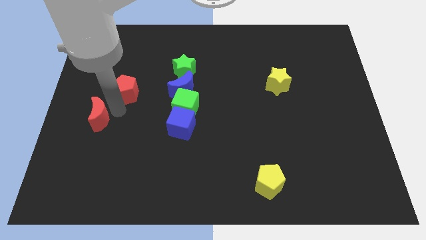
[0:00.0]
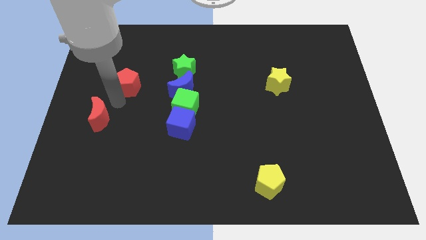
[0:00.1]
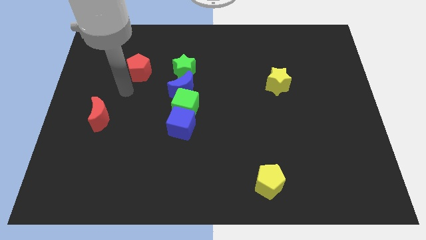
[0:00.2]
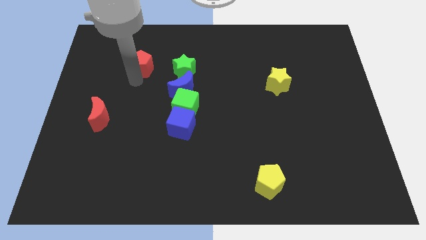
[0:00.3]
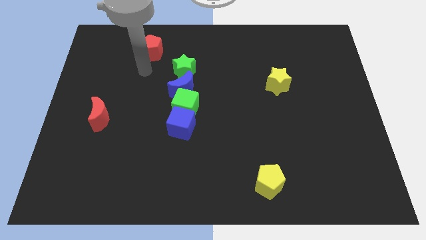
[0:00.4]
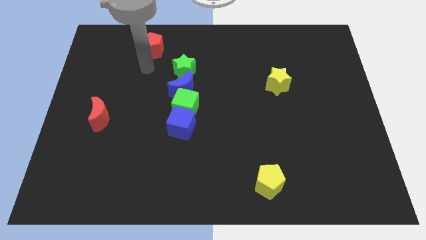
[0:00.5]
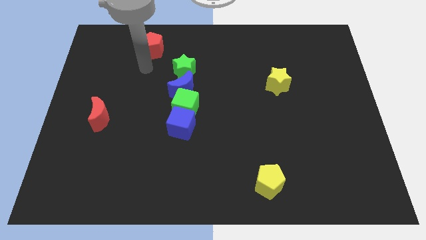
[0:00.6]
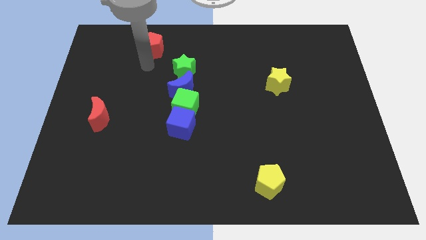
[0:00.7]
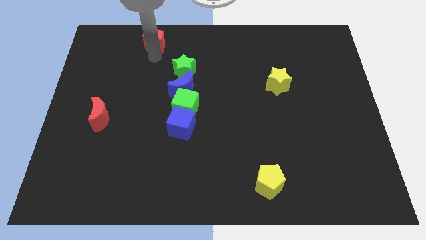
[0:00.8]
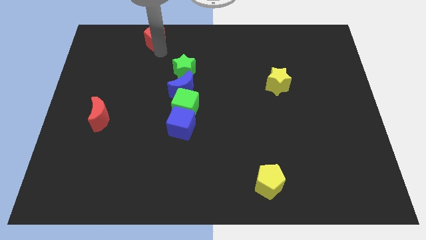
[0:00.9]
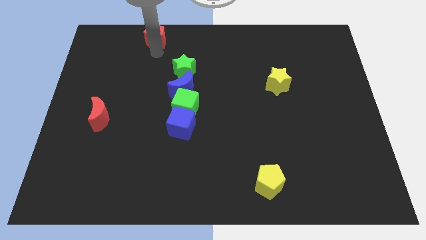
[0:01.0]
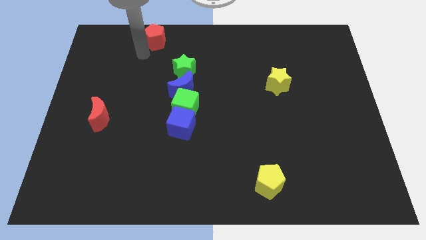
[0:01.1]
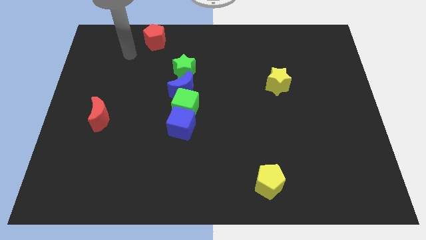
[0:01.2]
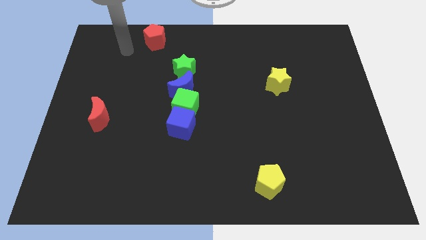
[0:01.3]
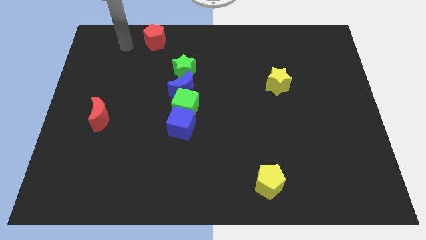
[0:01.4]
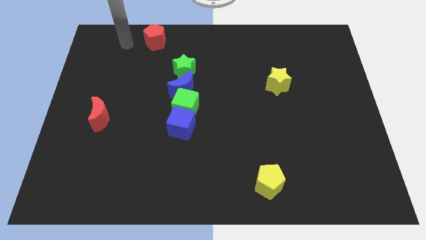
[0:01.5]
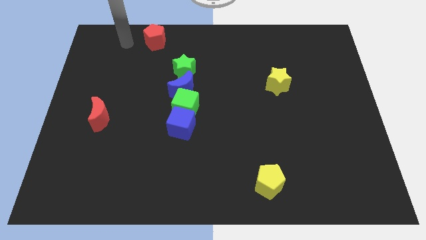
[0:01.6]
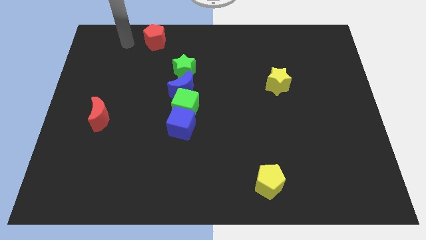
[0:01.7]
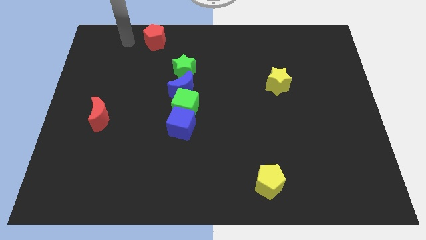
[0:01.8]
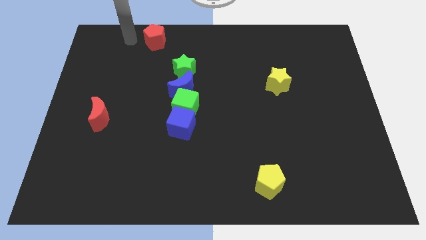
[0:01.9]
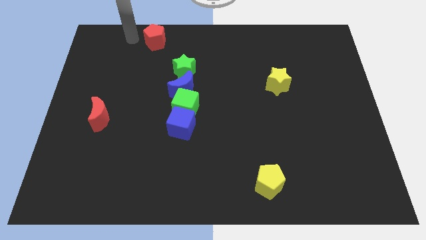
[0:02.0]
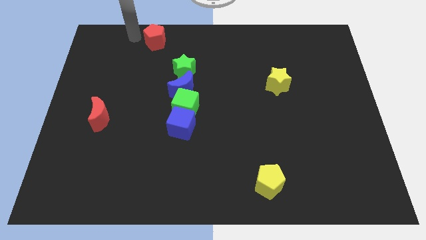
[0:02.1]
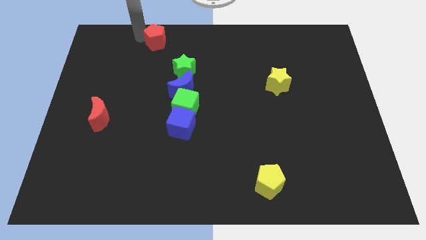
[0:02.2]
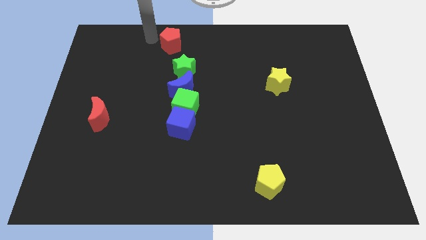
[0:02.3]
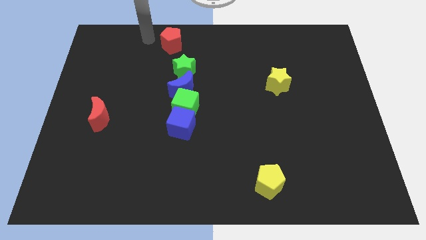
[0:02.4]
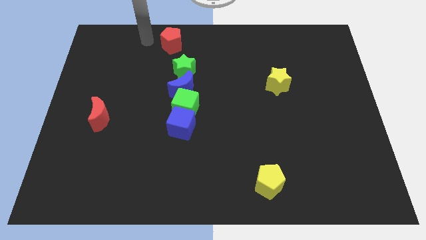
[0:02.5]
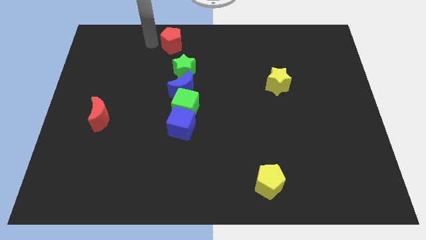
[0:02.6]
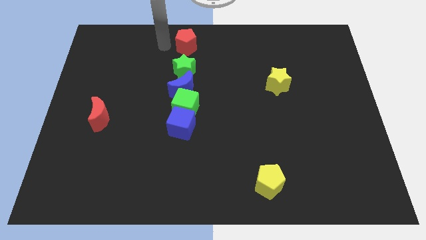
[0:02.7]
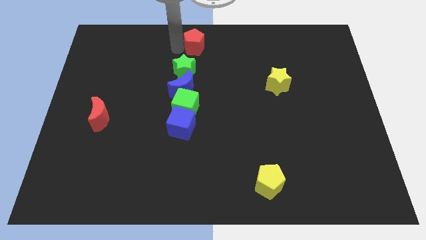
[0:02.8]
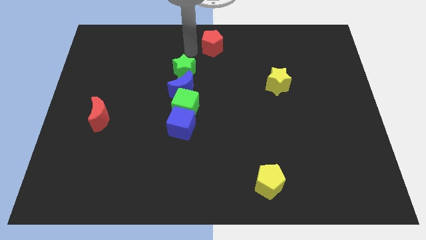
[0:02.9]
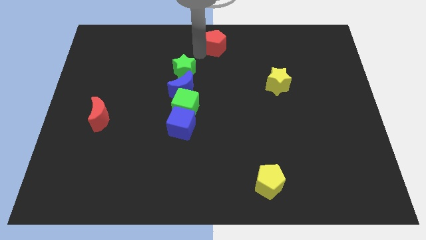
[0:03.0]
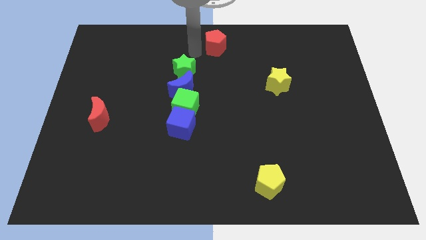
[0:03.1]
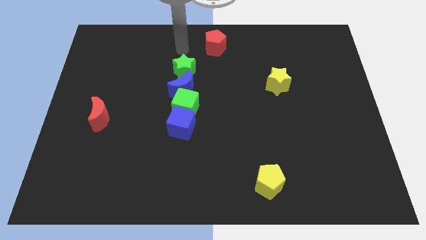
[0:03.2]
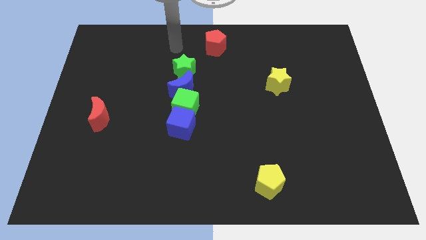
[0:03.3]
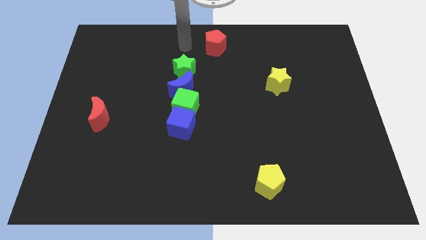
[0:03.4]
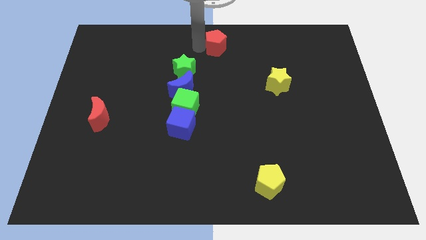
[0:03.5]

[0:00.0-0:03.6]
move the red pentagon to the right

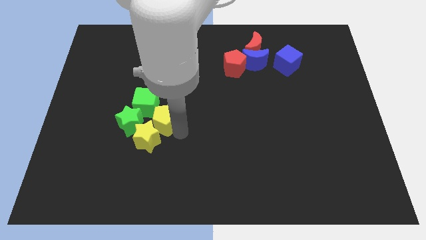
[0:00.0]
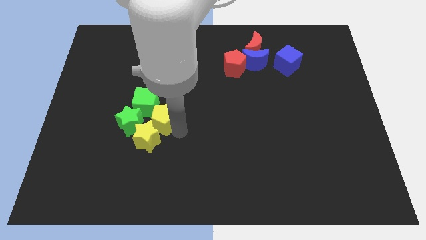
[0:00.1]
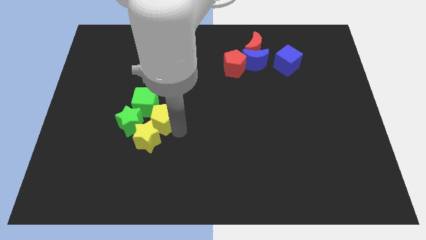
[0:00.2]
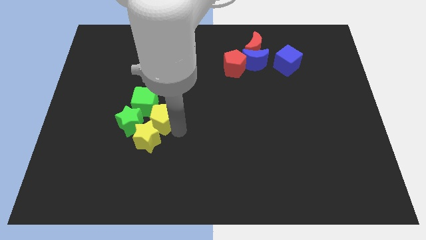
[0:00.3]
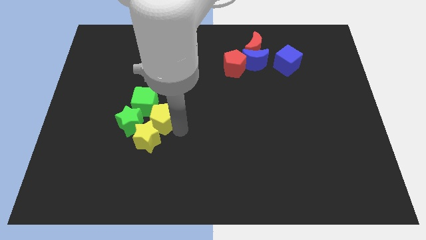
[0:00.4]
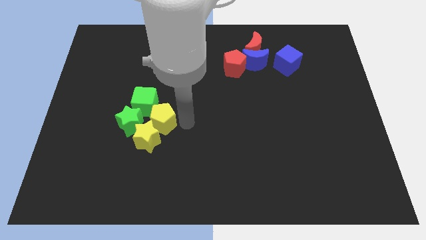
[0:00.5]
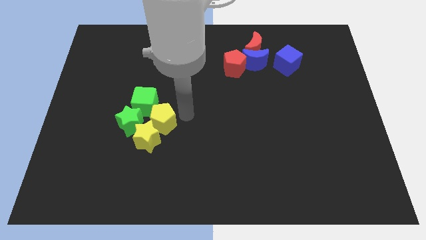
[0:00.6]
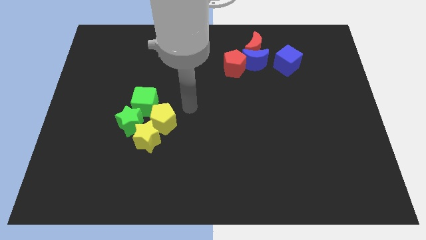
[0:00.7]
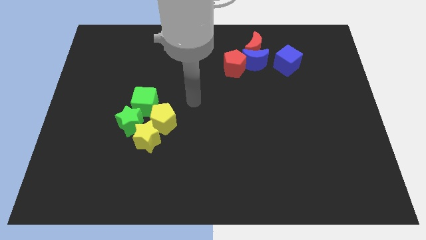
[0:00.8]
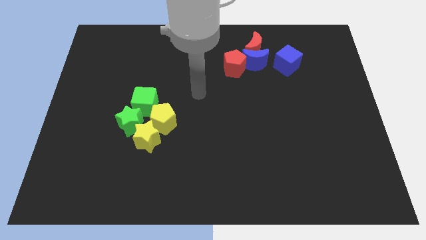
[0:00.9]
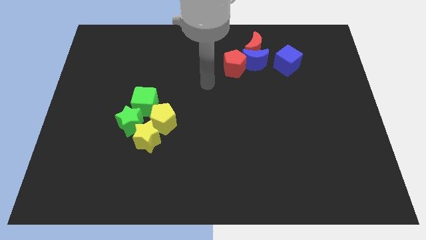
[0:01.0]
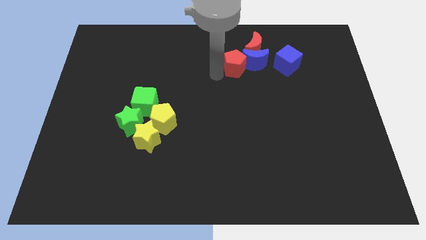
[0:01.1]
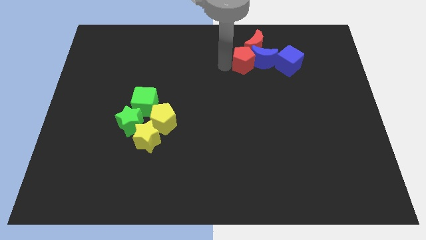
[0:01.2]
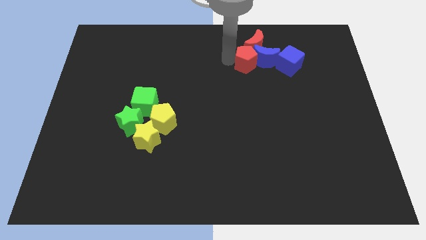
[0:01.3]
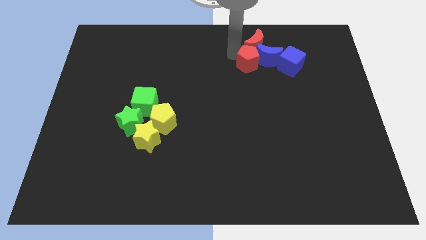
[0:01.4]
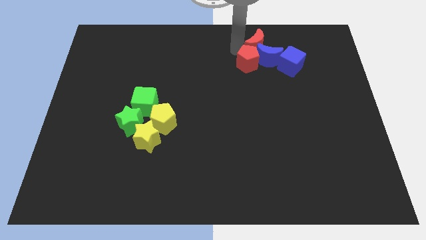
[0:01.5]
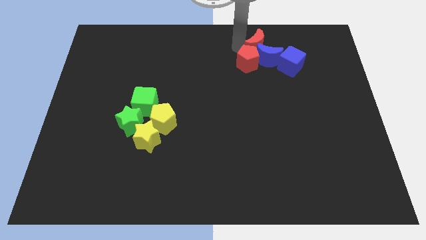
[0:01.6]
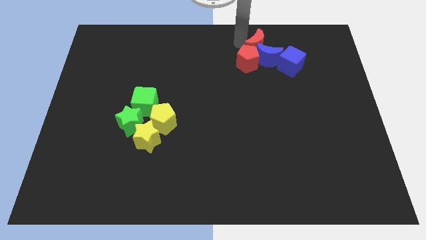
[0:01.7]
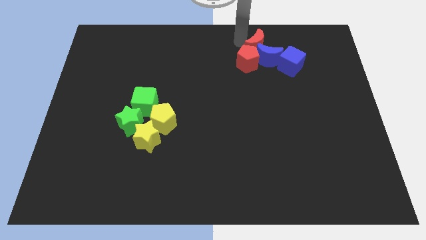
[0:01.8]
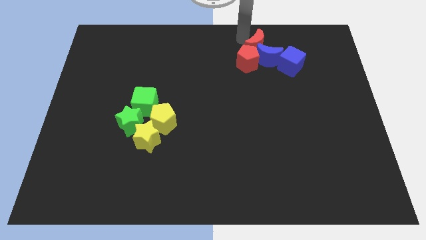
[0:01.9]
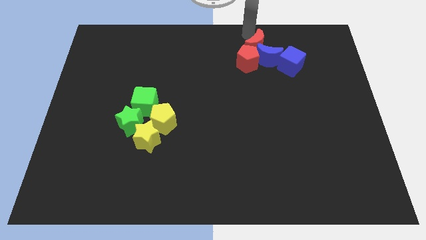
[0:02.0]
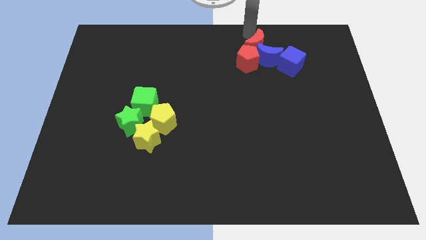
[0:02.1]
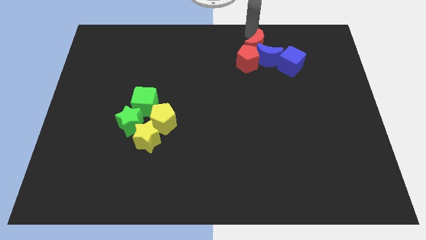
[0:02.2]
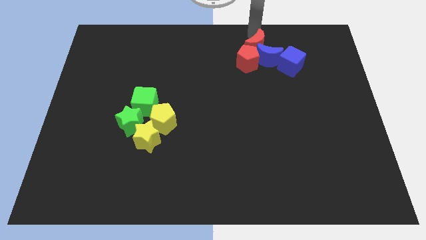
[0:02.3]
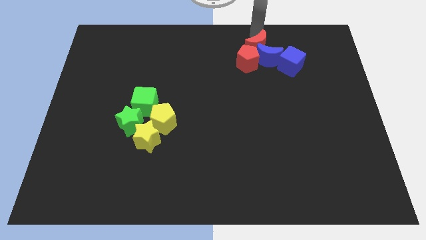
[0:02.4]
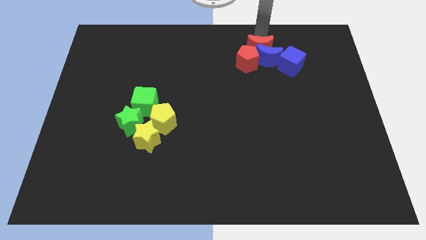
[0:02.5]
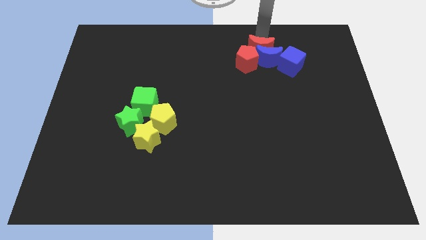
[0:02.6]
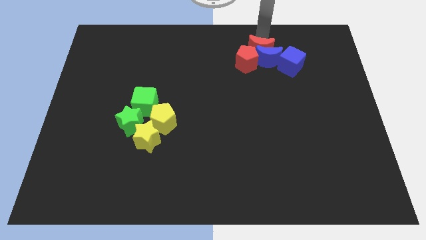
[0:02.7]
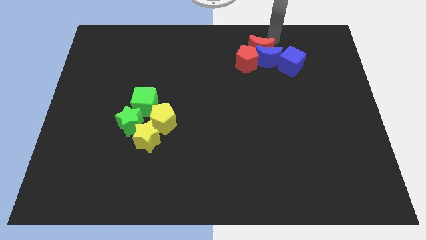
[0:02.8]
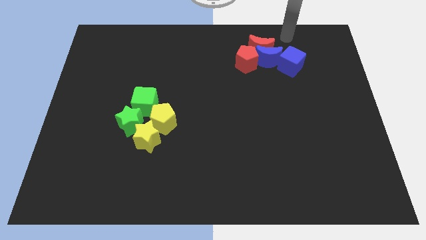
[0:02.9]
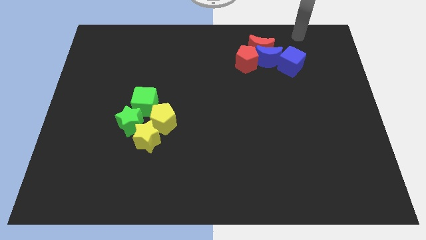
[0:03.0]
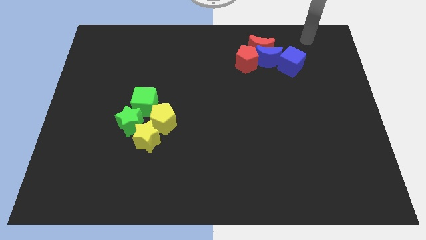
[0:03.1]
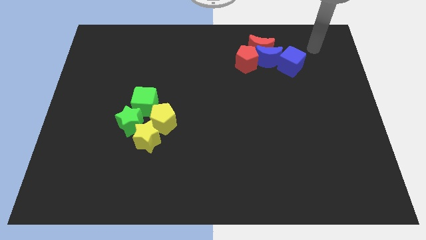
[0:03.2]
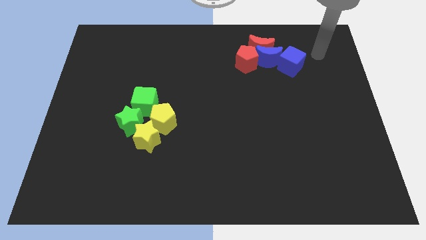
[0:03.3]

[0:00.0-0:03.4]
slide the red pentagon and red crescent to the right of the board

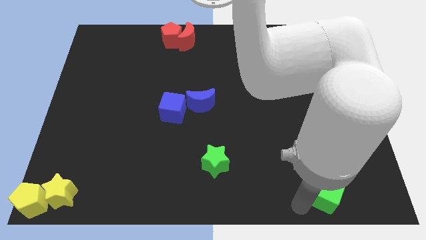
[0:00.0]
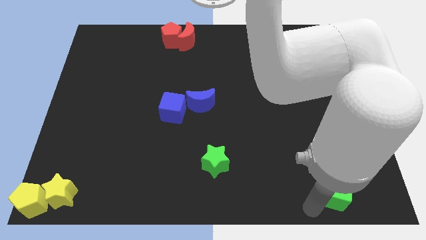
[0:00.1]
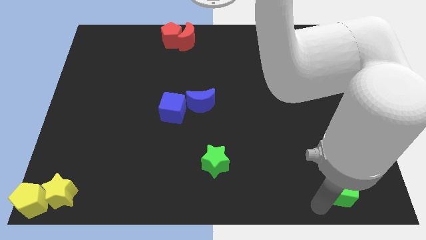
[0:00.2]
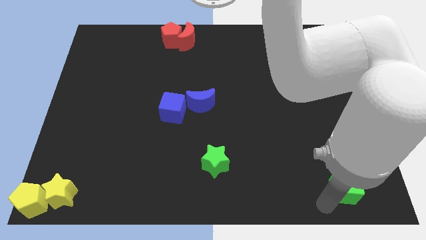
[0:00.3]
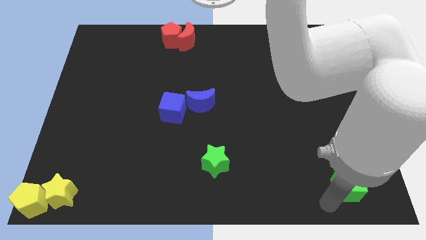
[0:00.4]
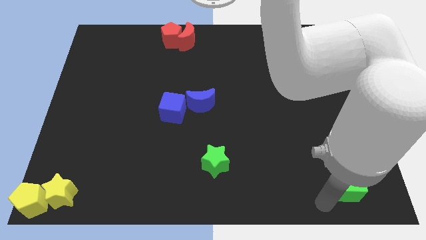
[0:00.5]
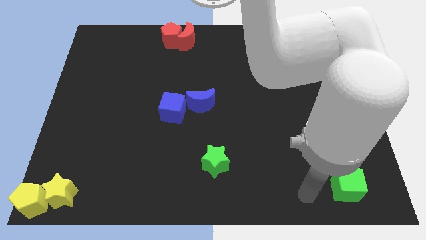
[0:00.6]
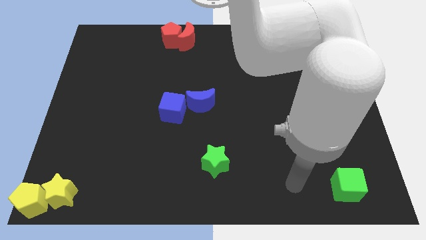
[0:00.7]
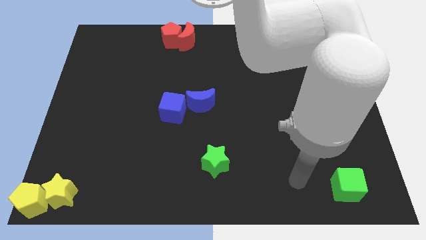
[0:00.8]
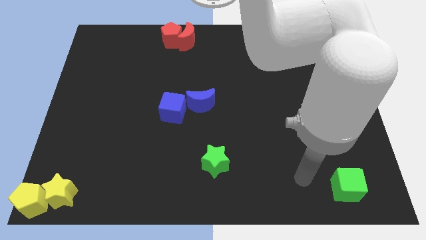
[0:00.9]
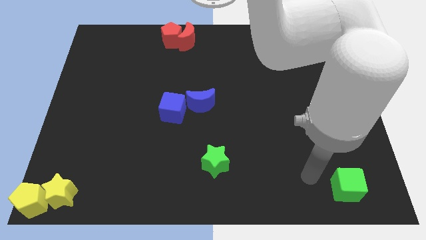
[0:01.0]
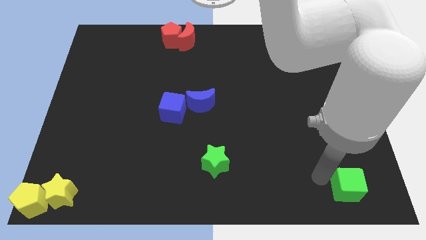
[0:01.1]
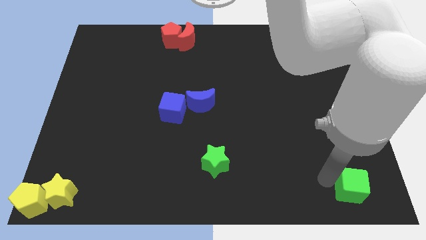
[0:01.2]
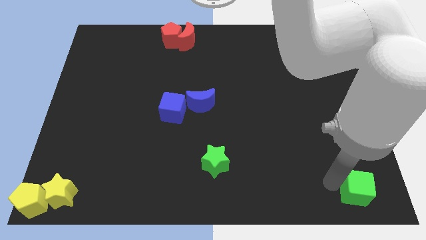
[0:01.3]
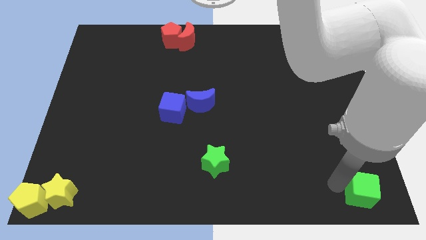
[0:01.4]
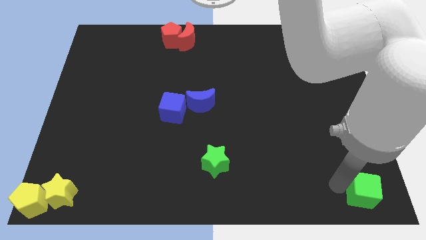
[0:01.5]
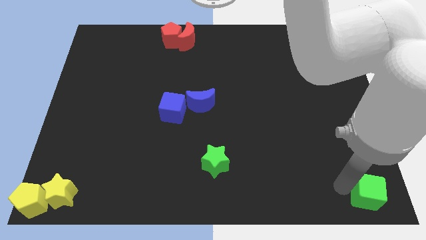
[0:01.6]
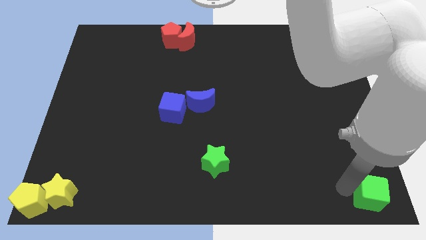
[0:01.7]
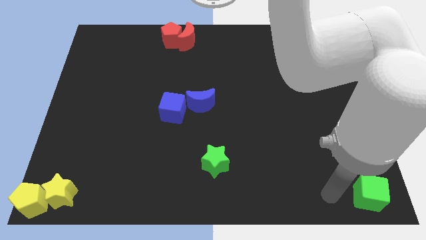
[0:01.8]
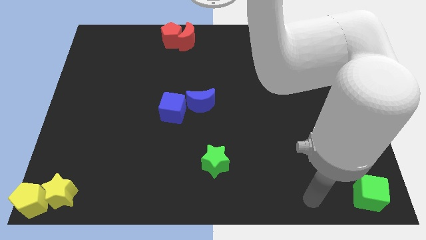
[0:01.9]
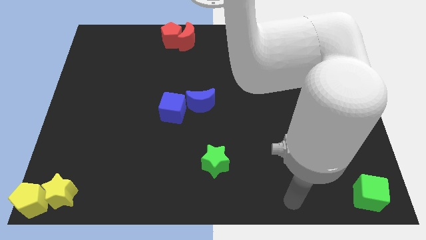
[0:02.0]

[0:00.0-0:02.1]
move the green cube to the bottom right of the board
